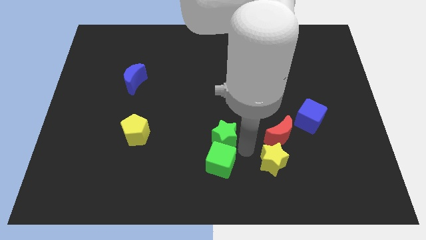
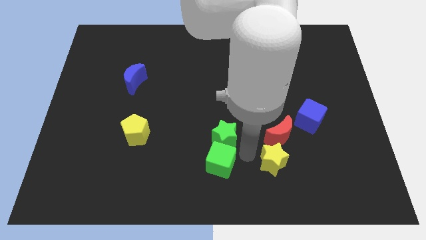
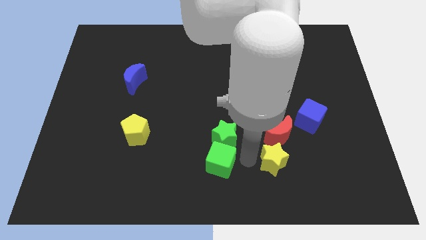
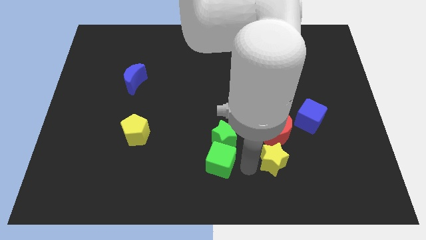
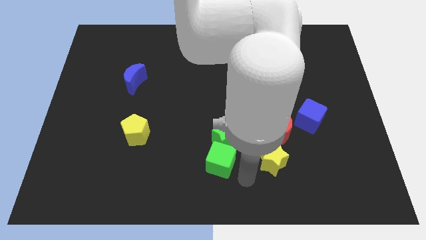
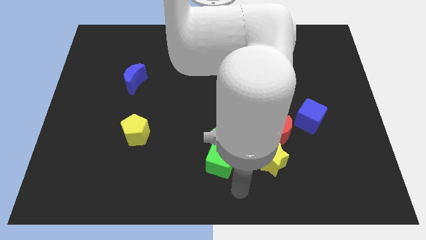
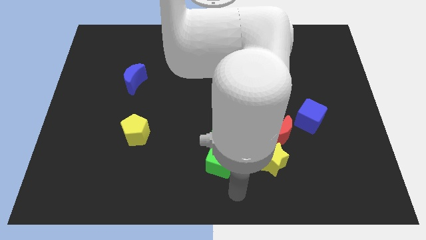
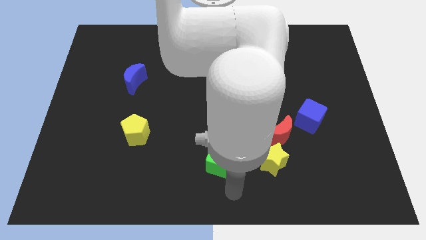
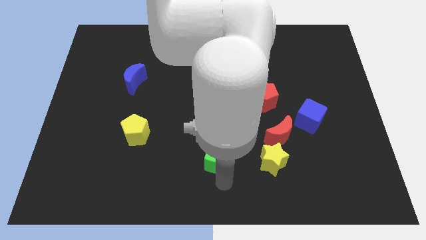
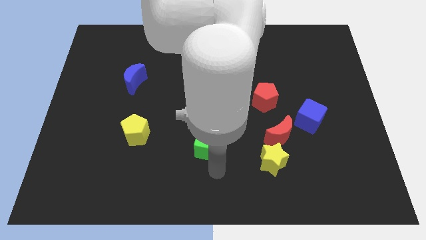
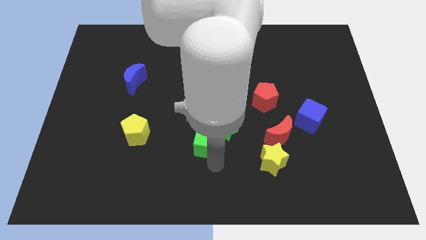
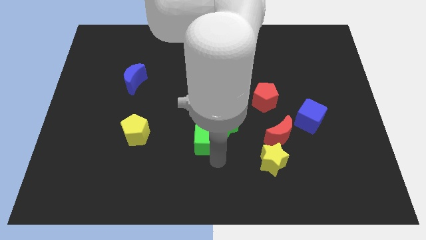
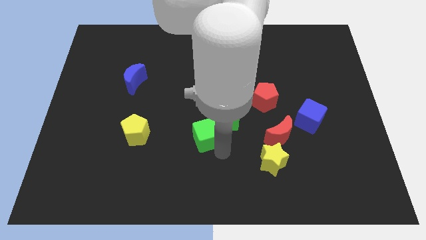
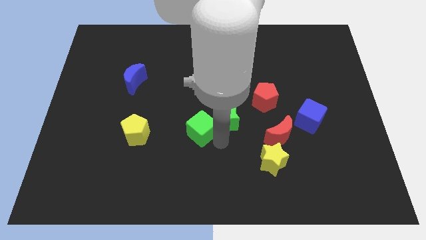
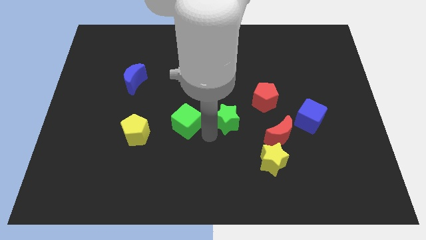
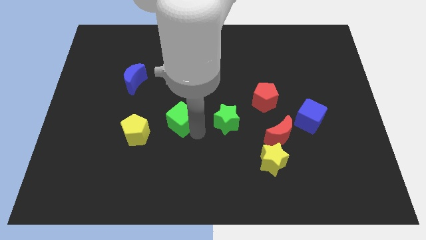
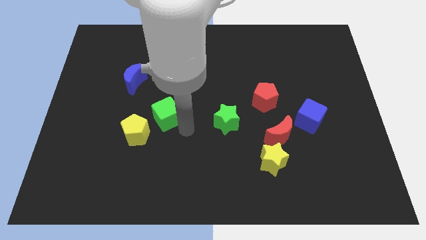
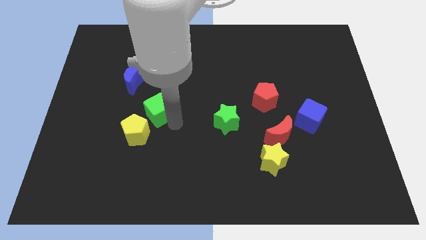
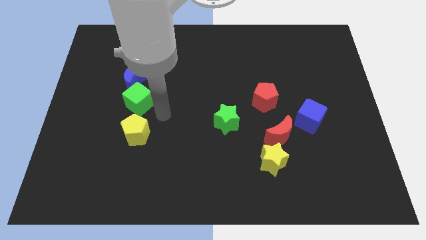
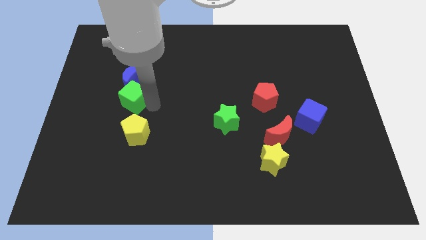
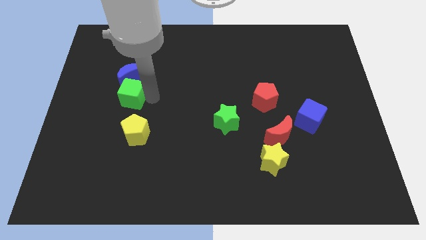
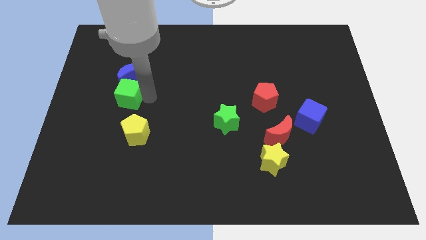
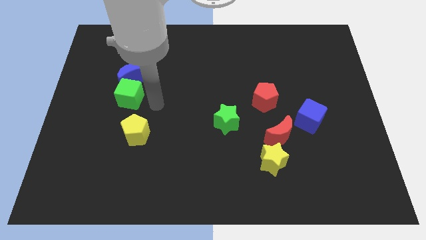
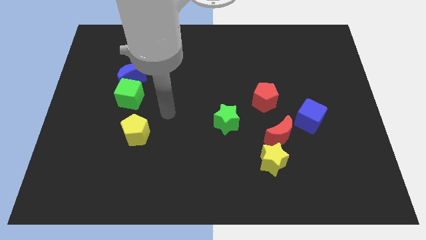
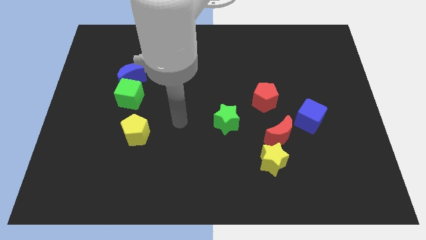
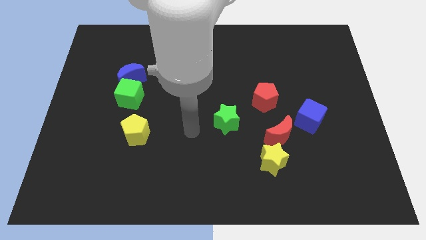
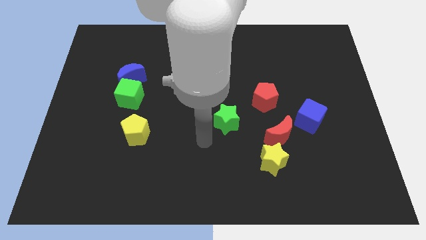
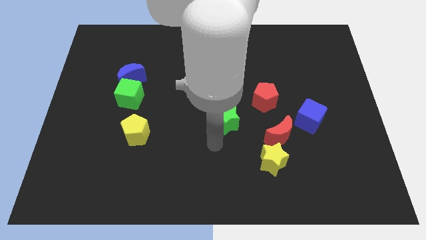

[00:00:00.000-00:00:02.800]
push the green cube below the blue crescent

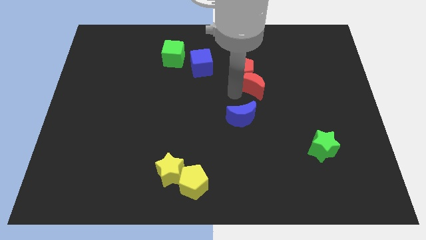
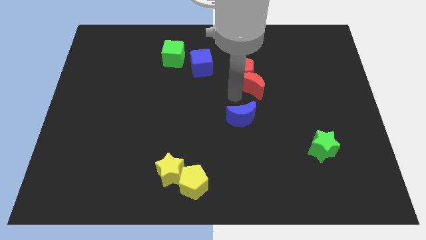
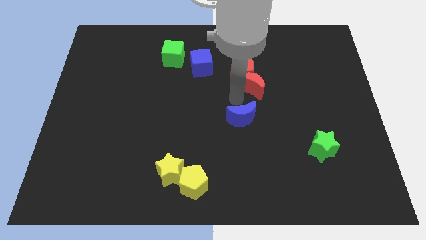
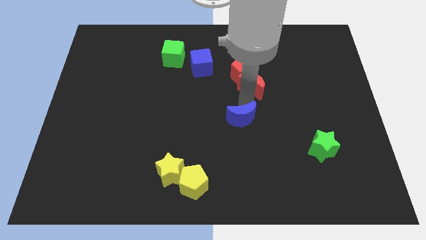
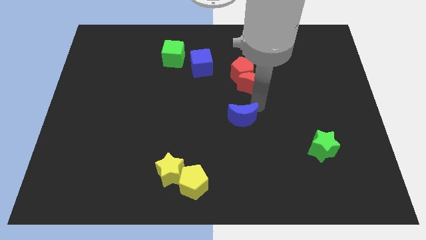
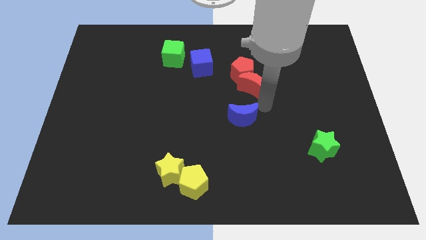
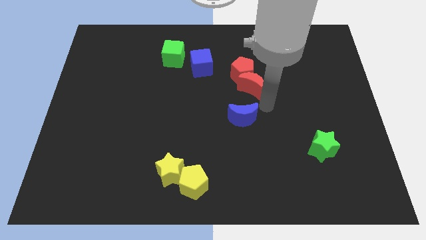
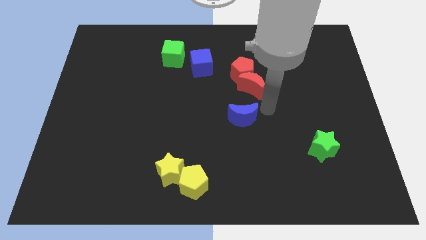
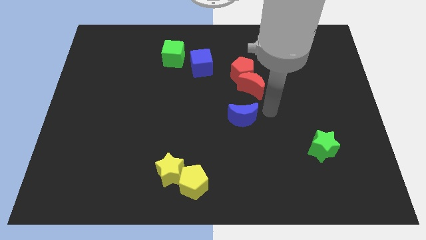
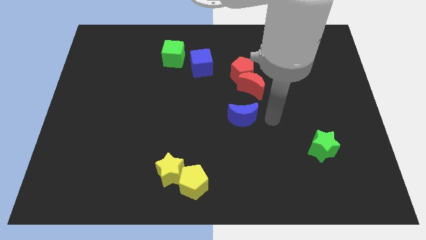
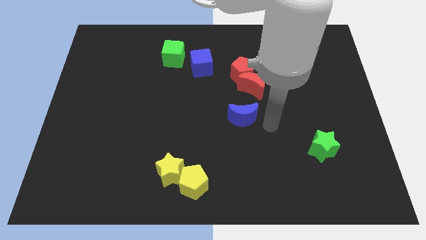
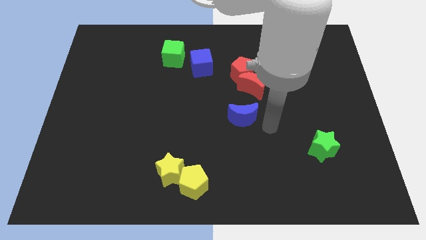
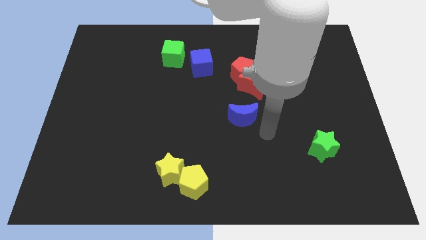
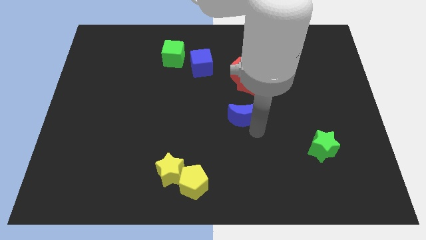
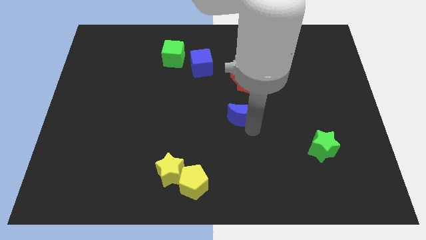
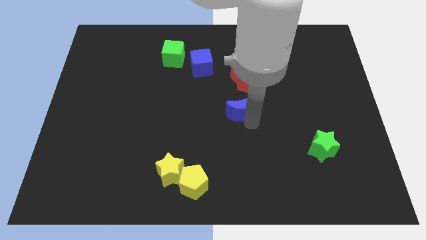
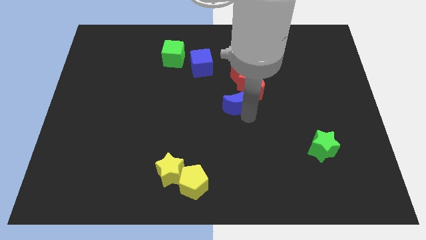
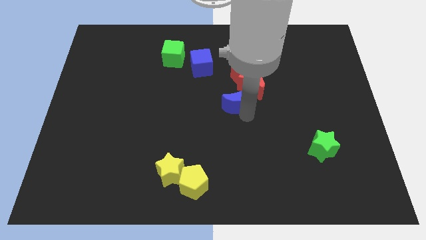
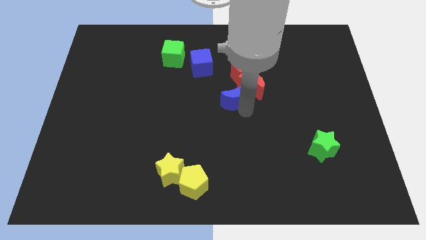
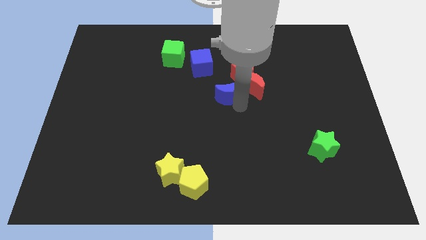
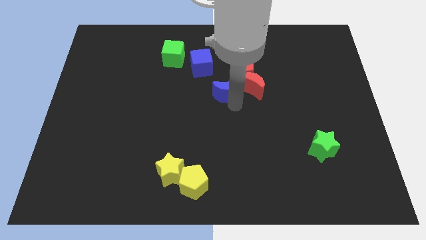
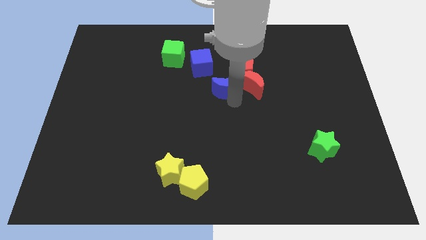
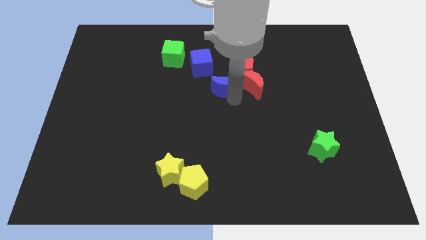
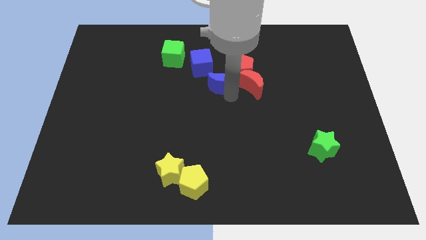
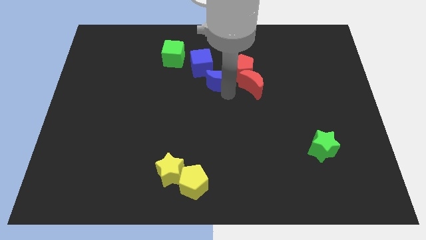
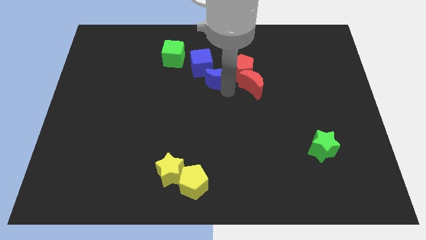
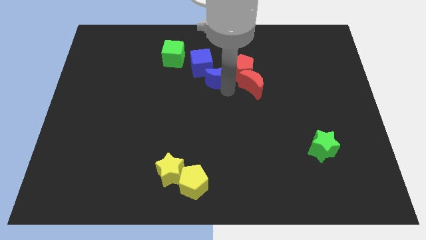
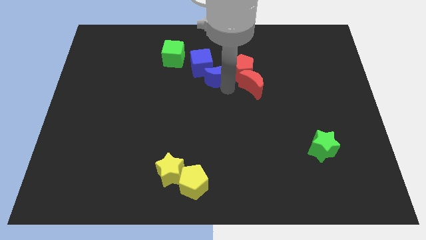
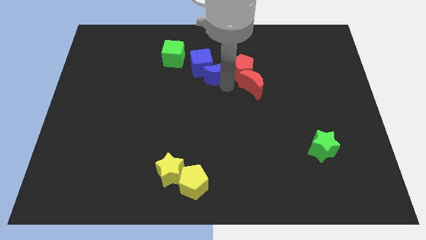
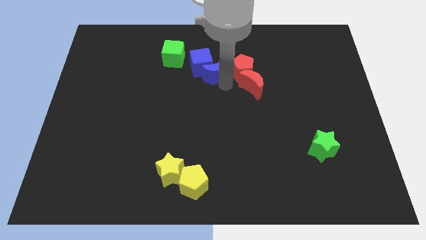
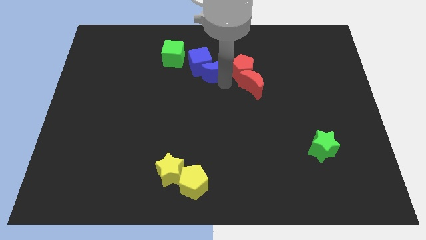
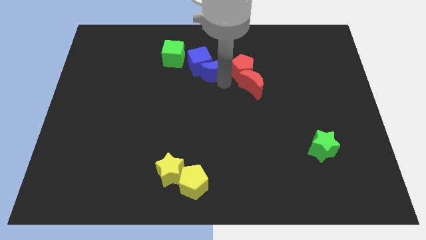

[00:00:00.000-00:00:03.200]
push the blue crescent into the blue cube

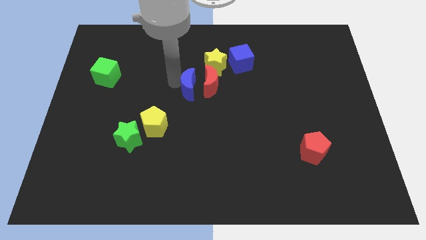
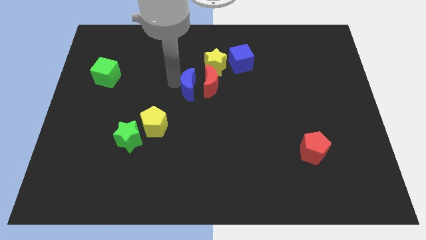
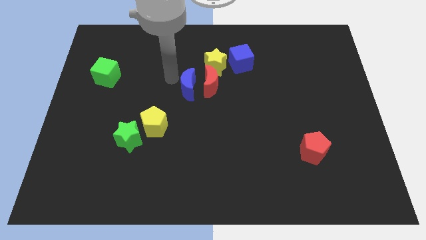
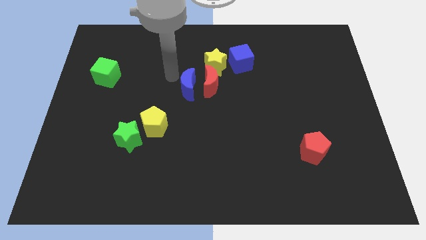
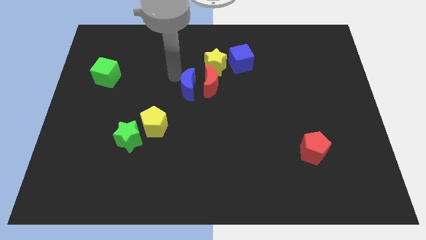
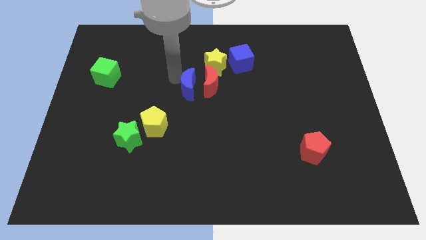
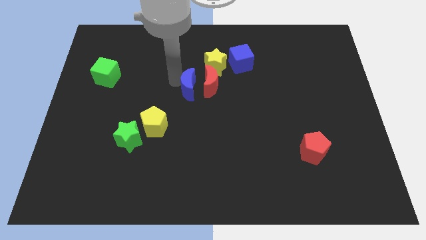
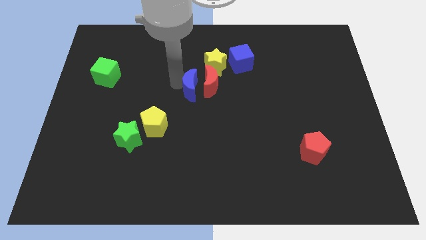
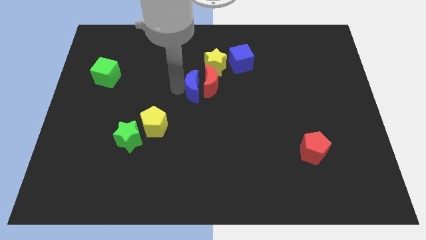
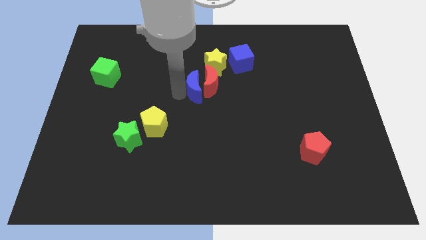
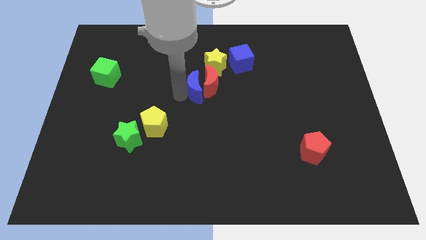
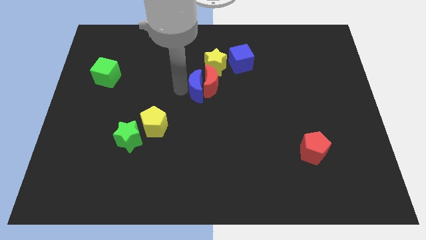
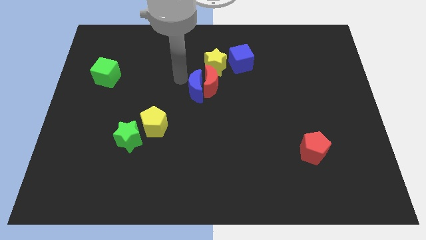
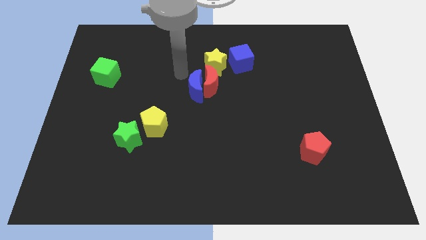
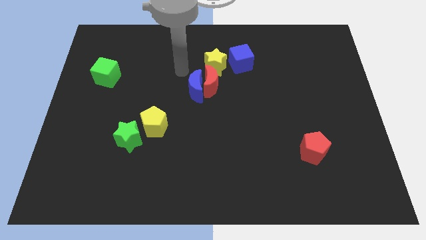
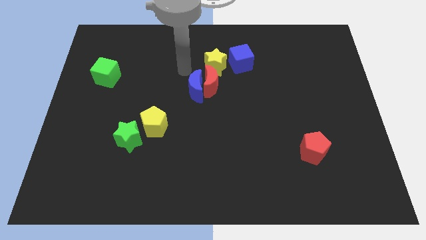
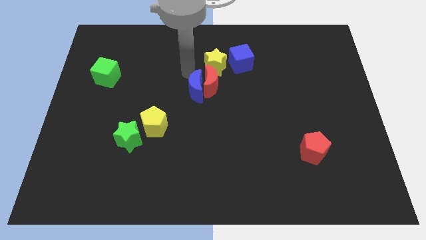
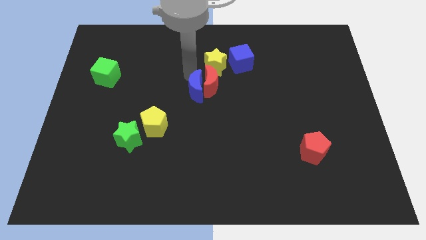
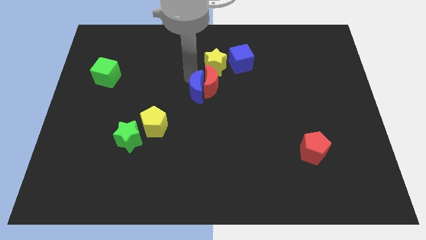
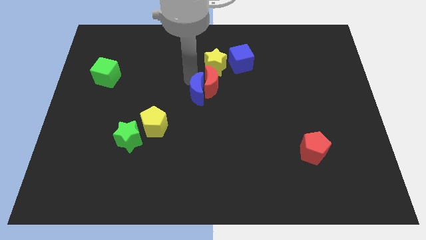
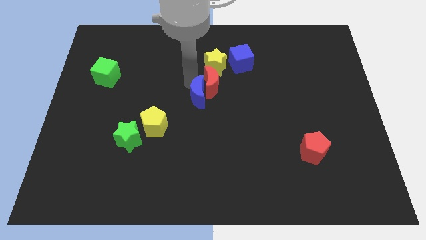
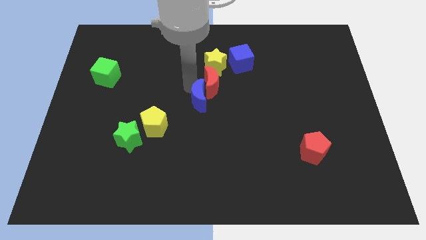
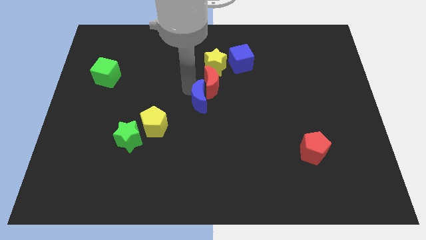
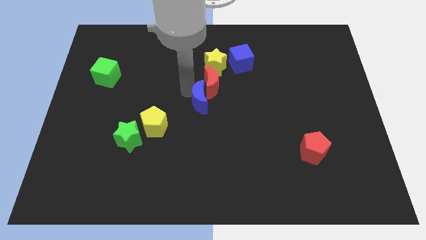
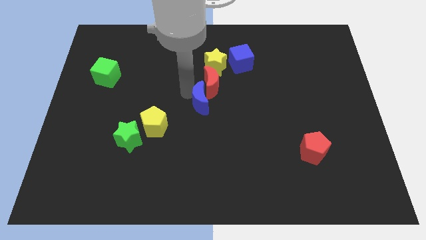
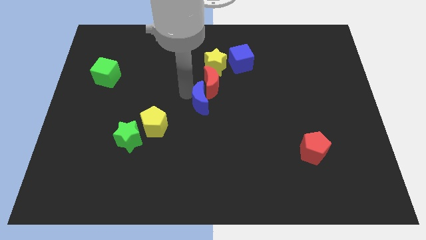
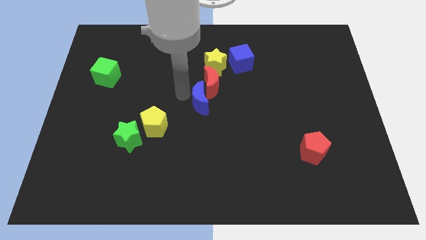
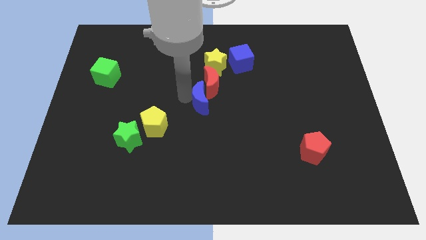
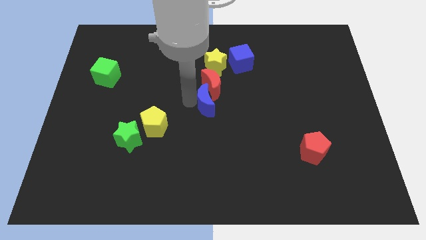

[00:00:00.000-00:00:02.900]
move the blue crescent to the bottom left of the red crescent
